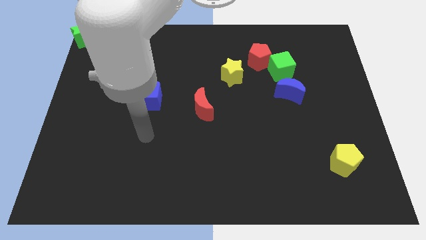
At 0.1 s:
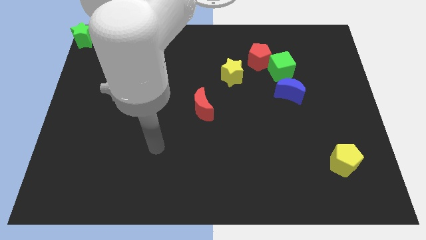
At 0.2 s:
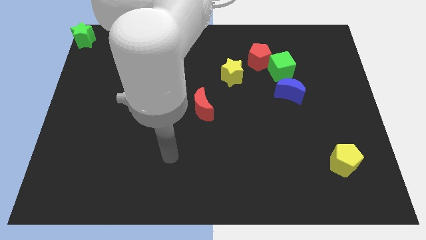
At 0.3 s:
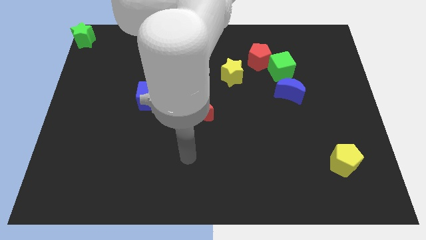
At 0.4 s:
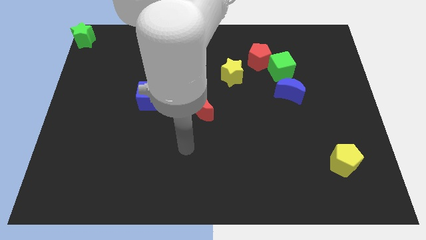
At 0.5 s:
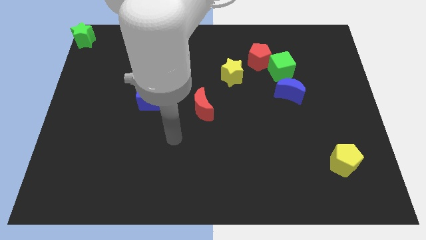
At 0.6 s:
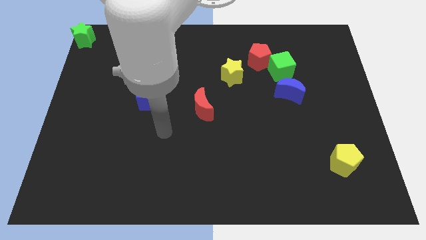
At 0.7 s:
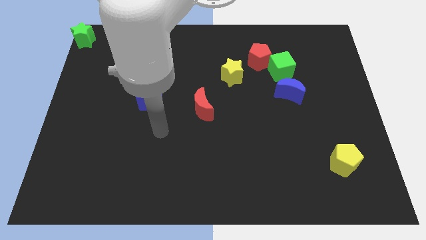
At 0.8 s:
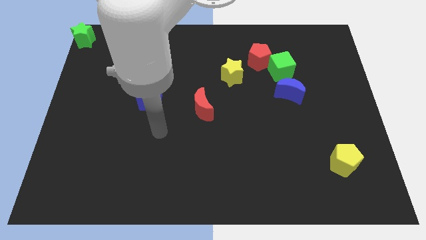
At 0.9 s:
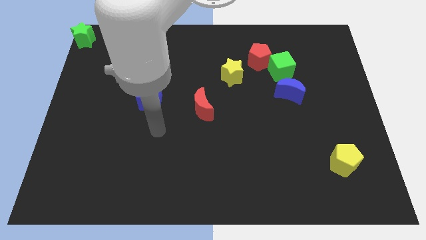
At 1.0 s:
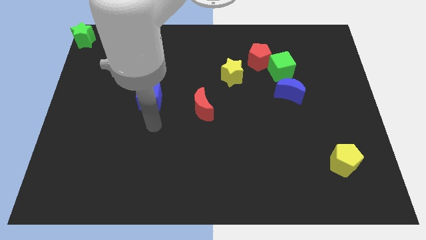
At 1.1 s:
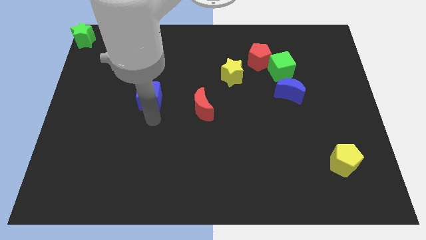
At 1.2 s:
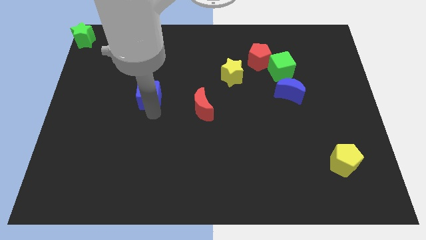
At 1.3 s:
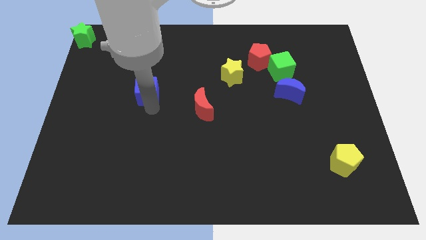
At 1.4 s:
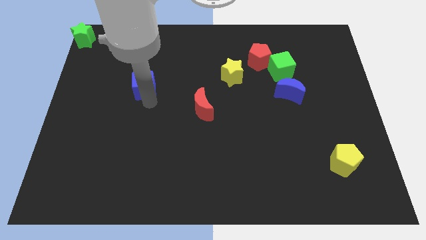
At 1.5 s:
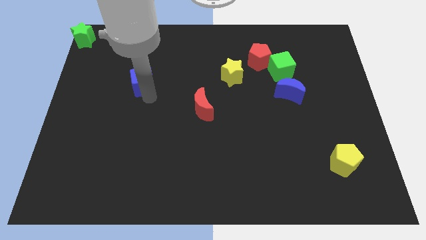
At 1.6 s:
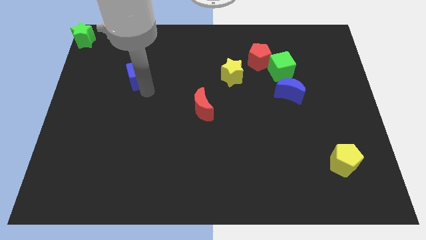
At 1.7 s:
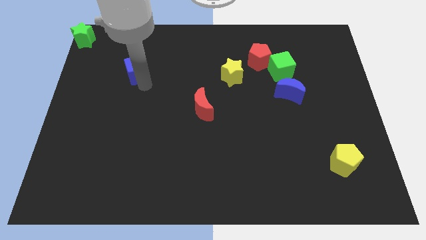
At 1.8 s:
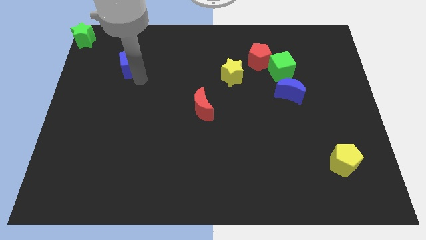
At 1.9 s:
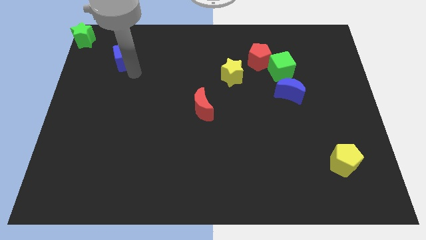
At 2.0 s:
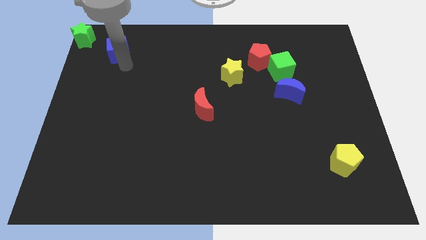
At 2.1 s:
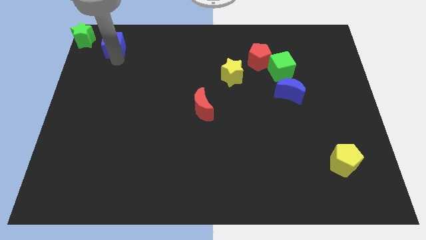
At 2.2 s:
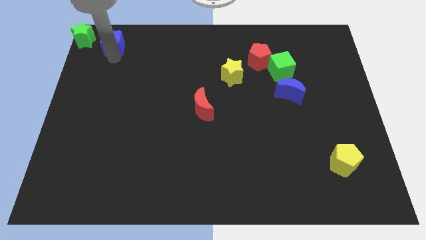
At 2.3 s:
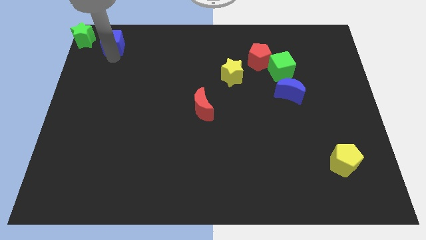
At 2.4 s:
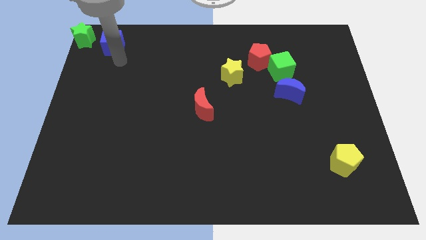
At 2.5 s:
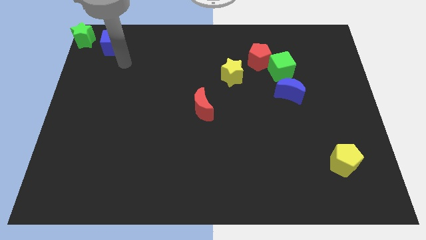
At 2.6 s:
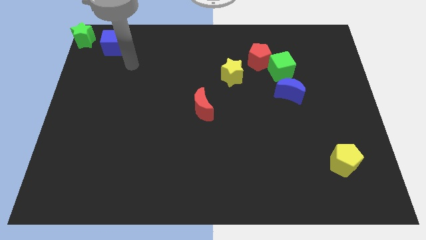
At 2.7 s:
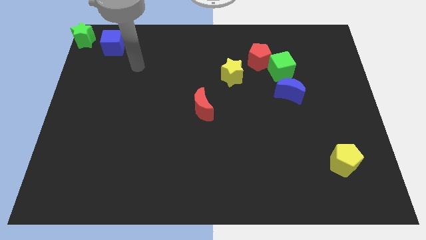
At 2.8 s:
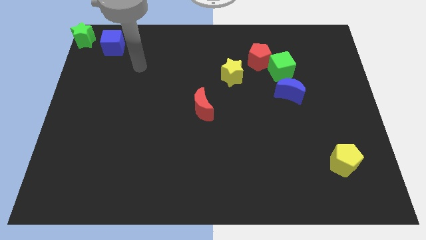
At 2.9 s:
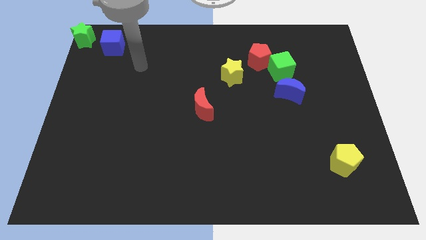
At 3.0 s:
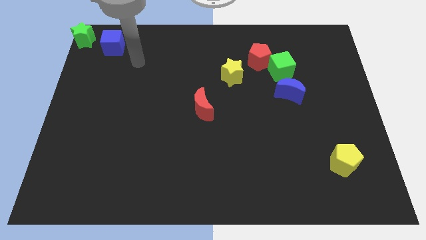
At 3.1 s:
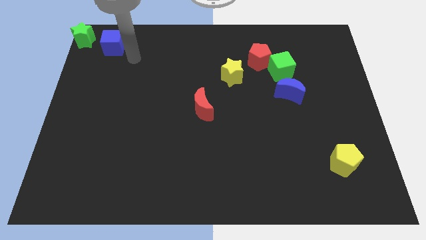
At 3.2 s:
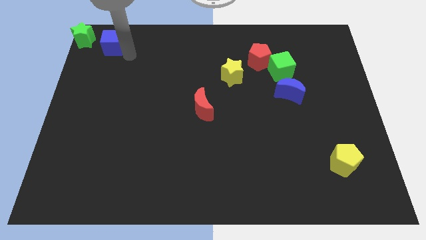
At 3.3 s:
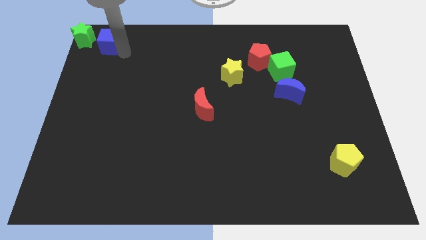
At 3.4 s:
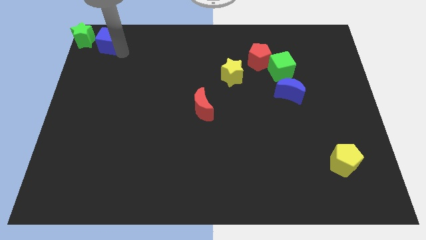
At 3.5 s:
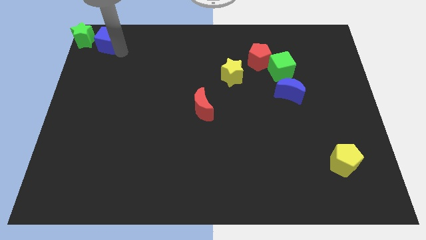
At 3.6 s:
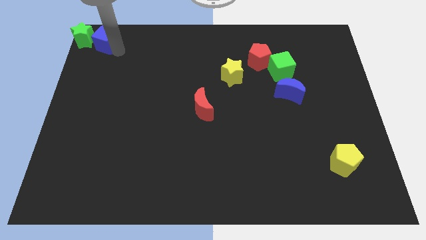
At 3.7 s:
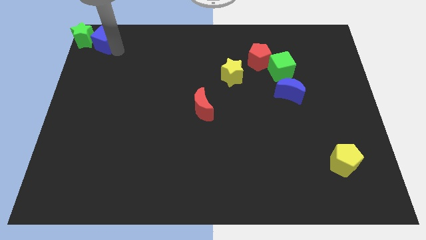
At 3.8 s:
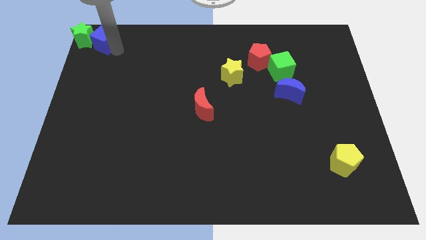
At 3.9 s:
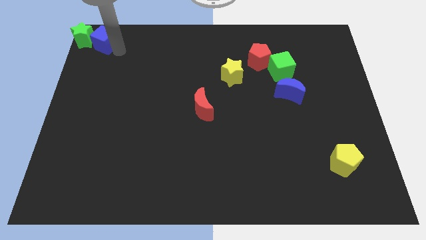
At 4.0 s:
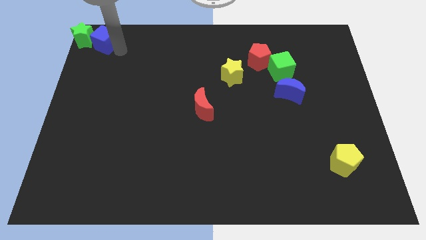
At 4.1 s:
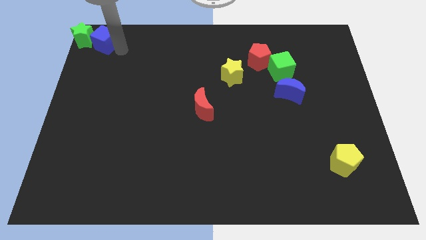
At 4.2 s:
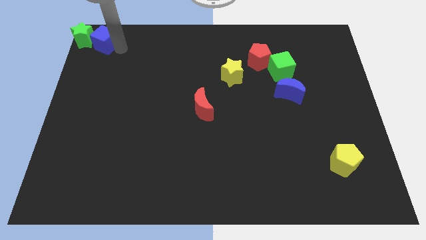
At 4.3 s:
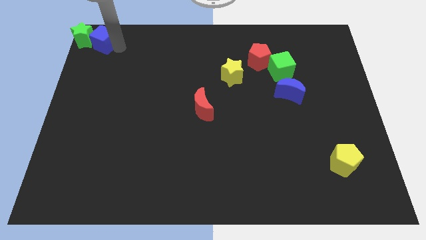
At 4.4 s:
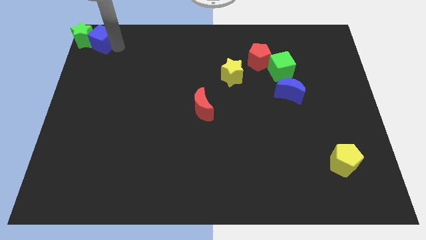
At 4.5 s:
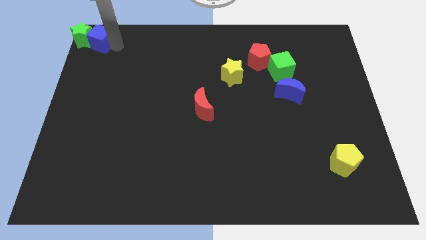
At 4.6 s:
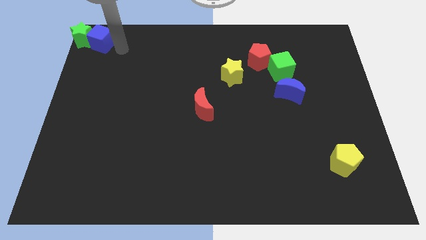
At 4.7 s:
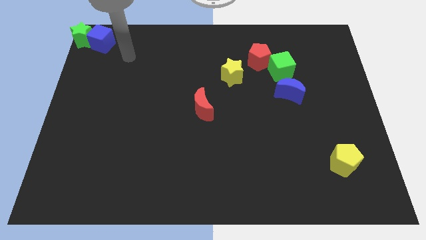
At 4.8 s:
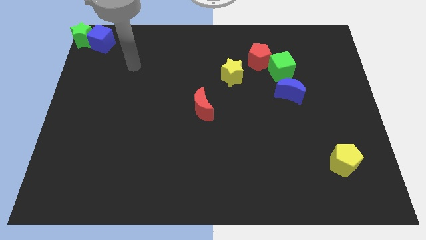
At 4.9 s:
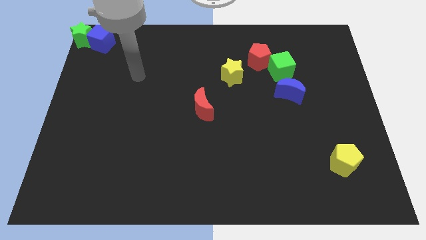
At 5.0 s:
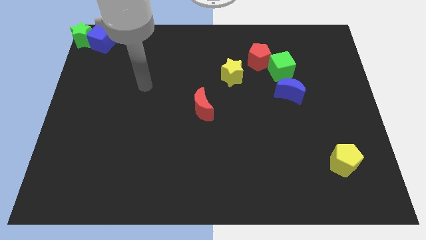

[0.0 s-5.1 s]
push the blue cube into right of the green star

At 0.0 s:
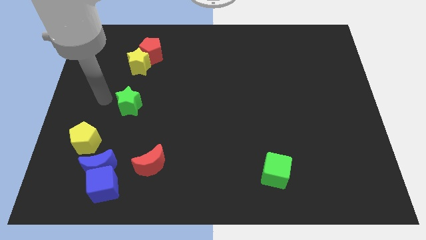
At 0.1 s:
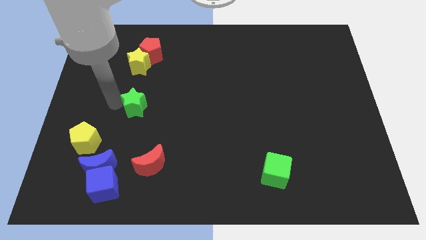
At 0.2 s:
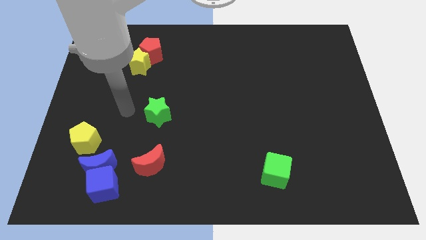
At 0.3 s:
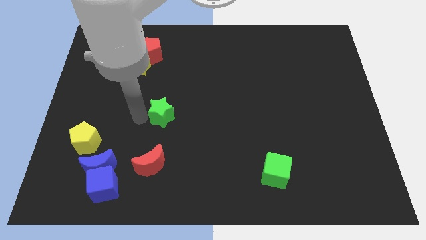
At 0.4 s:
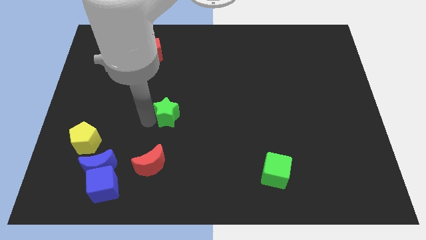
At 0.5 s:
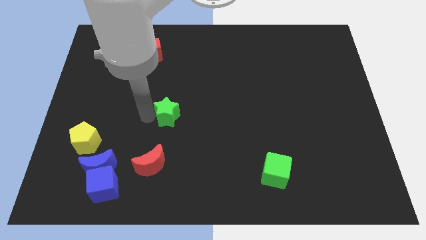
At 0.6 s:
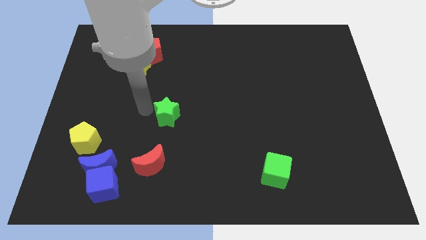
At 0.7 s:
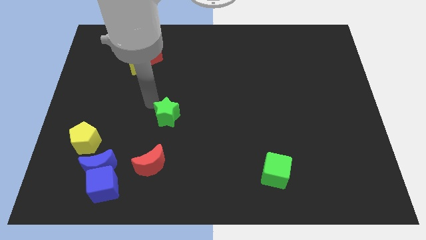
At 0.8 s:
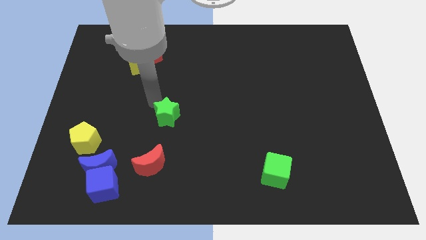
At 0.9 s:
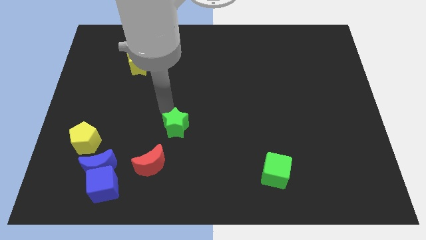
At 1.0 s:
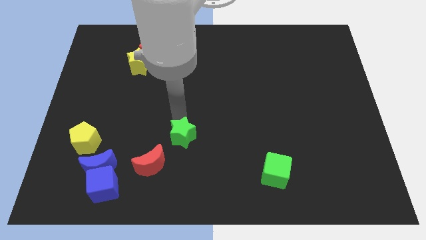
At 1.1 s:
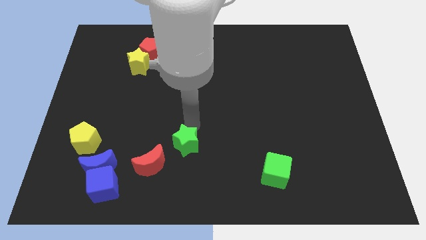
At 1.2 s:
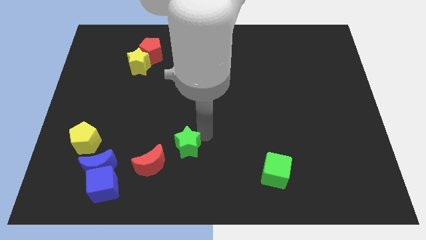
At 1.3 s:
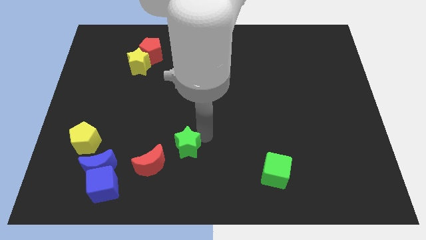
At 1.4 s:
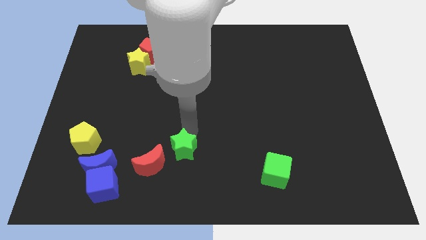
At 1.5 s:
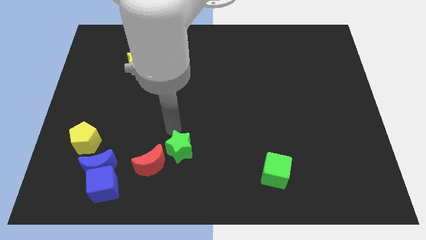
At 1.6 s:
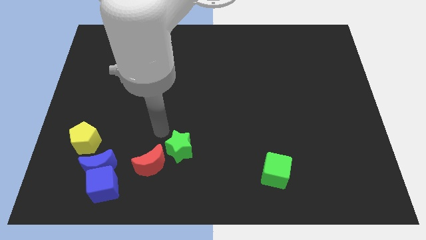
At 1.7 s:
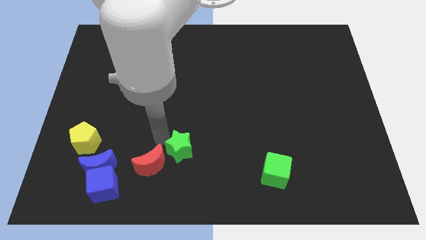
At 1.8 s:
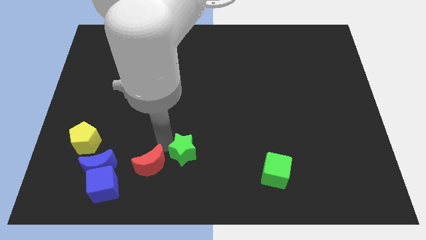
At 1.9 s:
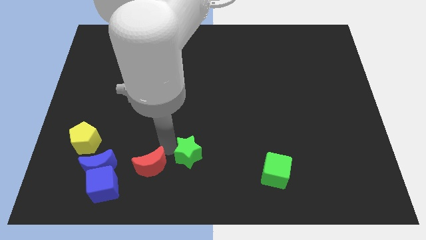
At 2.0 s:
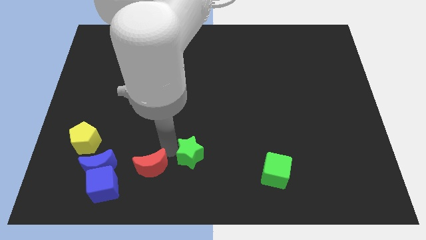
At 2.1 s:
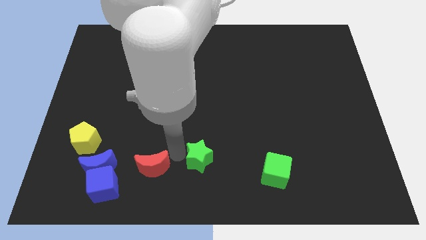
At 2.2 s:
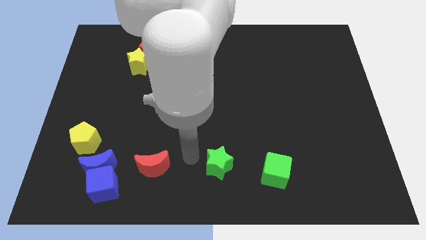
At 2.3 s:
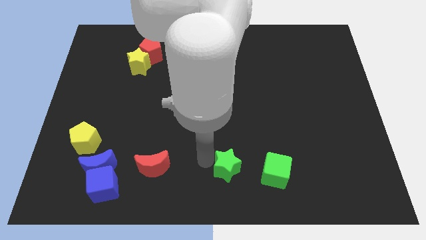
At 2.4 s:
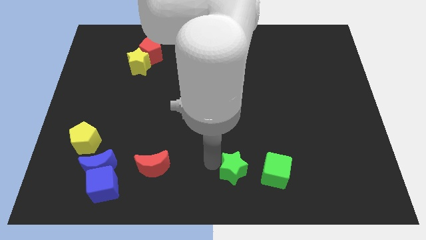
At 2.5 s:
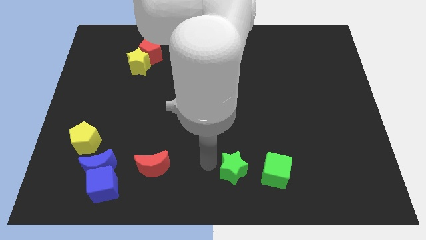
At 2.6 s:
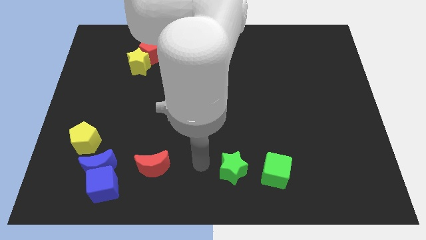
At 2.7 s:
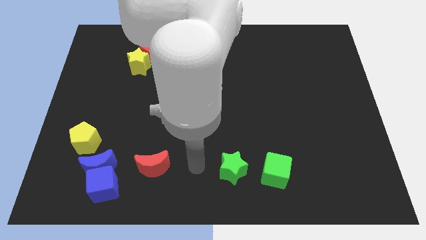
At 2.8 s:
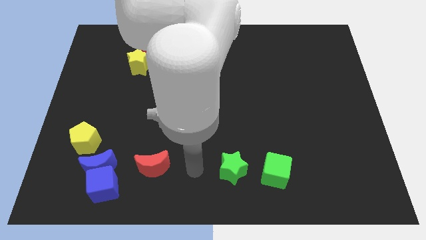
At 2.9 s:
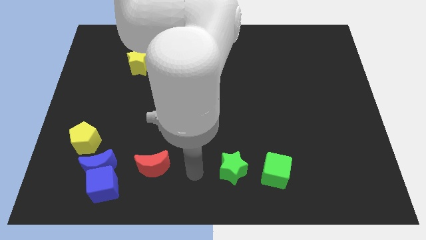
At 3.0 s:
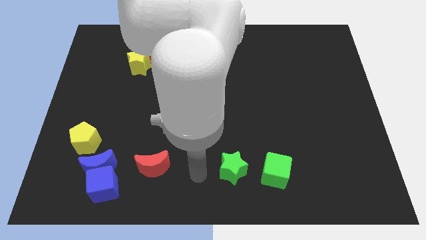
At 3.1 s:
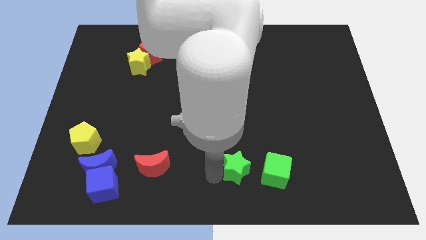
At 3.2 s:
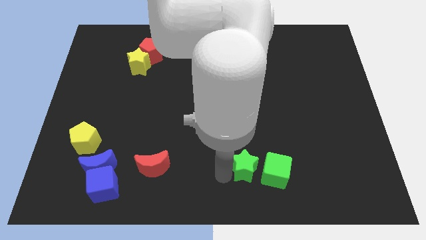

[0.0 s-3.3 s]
move the green star to the left of the green cube

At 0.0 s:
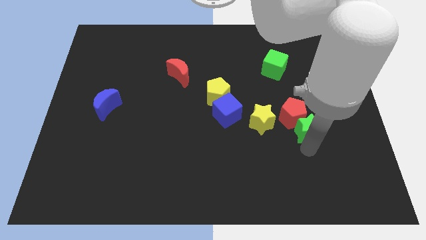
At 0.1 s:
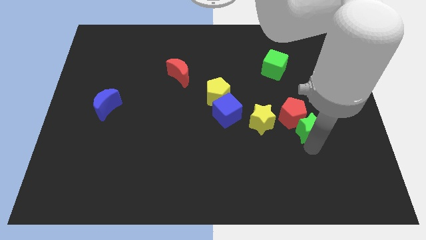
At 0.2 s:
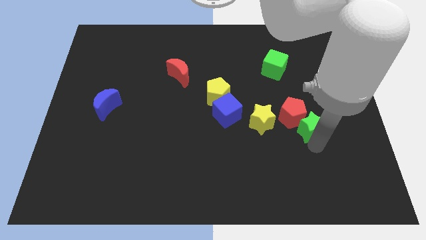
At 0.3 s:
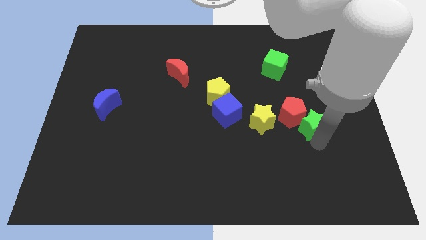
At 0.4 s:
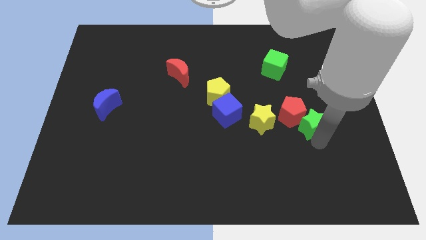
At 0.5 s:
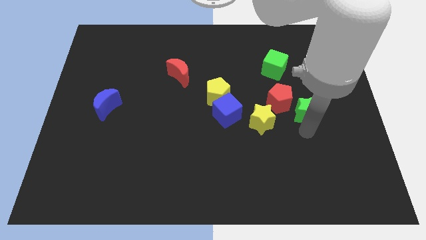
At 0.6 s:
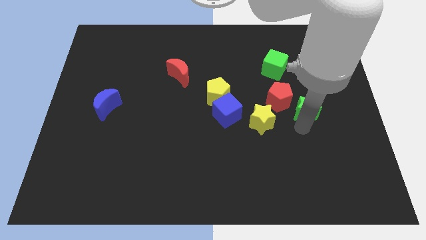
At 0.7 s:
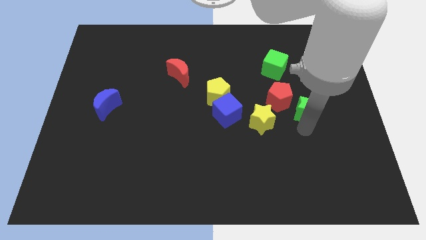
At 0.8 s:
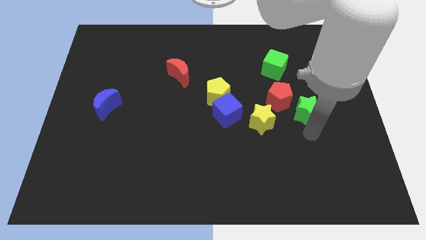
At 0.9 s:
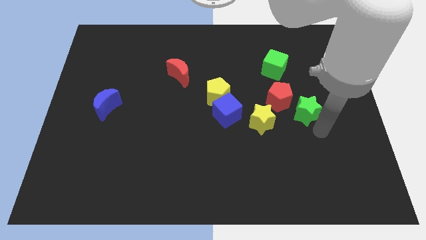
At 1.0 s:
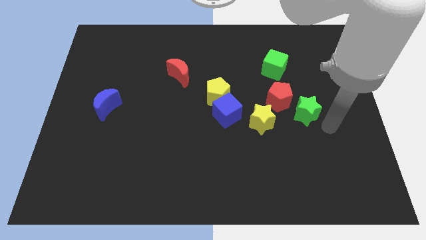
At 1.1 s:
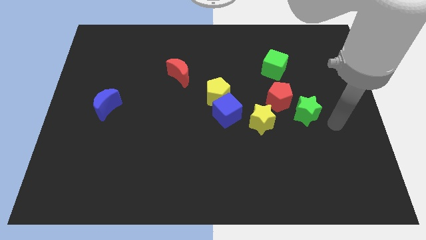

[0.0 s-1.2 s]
push the green star and red pentagon towards the green cube
